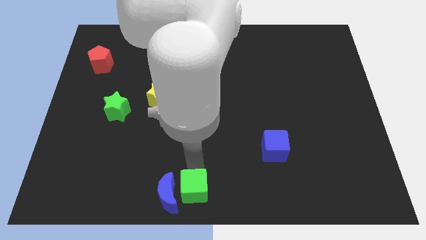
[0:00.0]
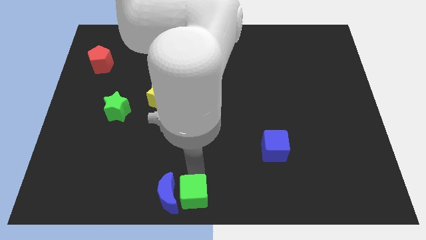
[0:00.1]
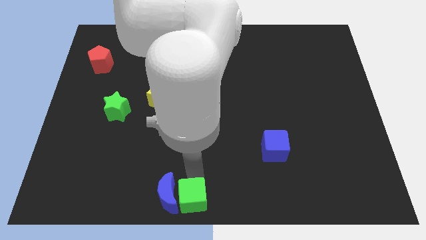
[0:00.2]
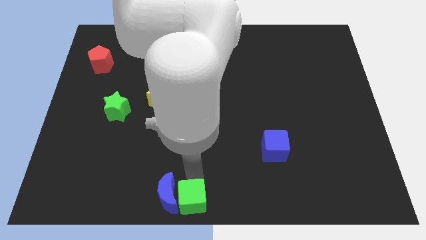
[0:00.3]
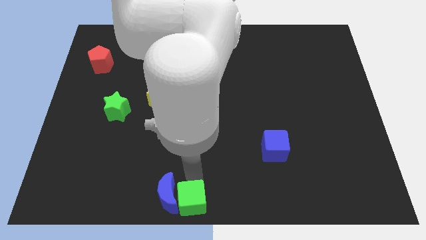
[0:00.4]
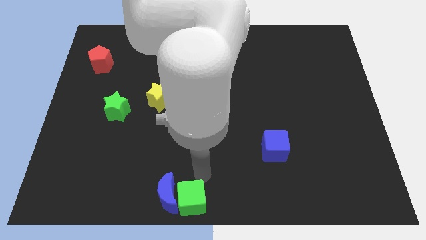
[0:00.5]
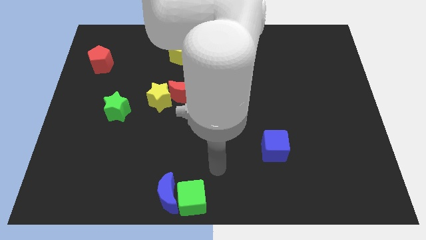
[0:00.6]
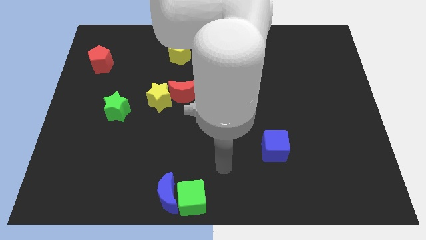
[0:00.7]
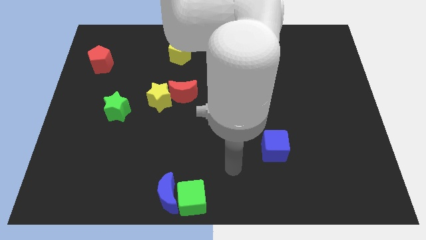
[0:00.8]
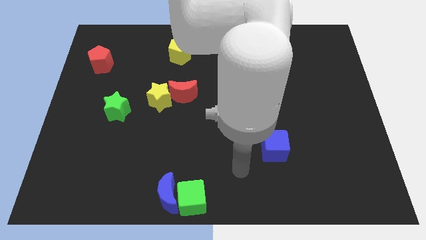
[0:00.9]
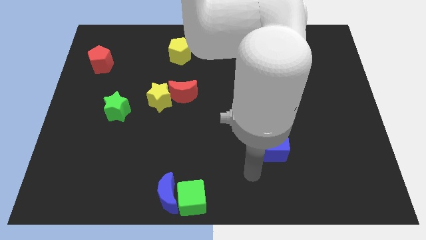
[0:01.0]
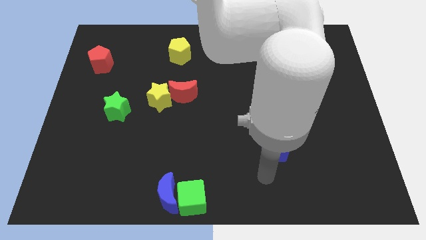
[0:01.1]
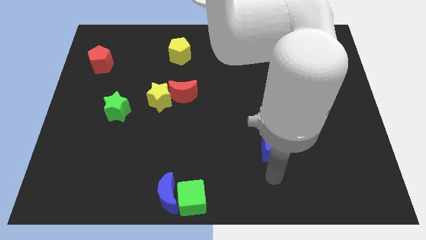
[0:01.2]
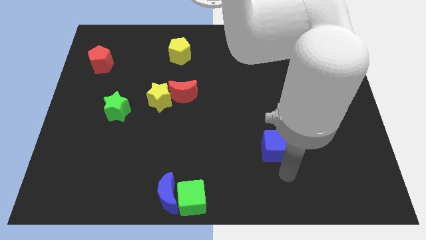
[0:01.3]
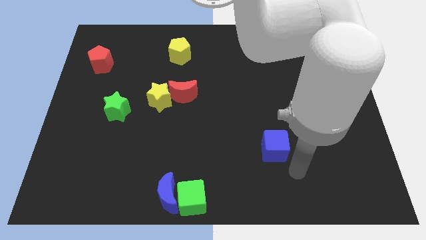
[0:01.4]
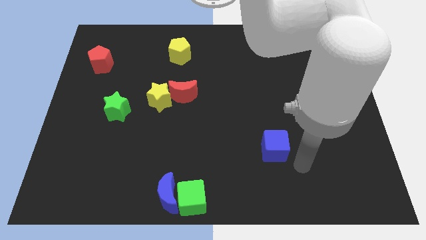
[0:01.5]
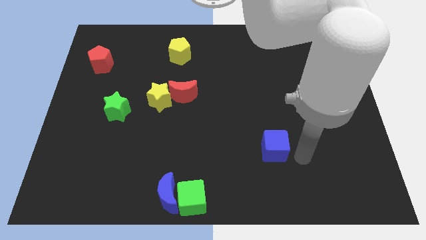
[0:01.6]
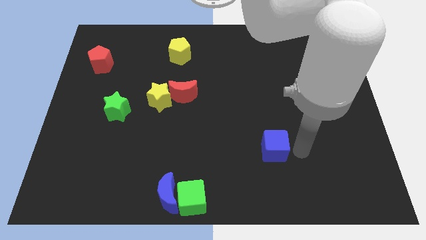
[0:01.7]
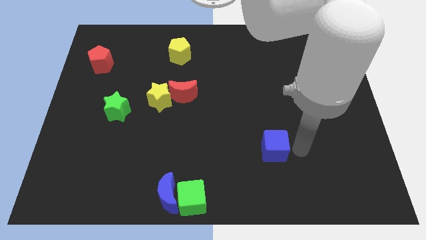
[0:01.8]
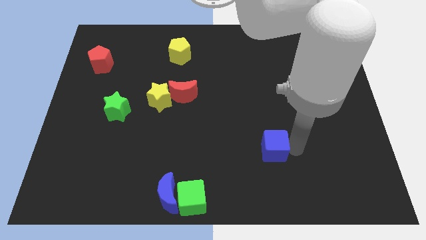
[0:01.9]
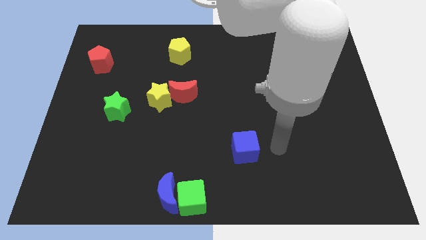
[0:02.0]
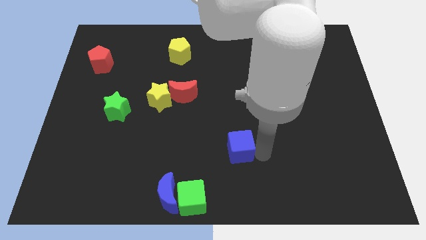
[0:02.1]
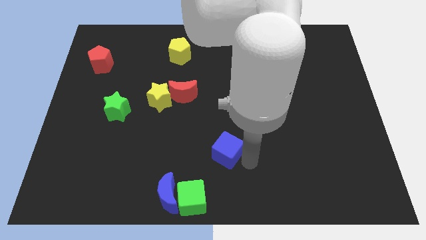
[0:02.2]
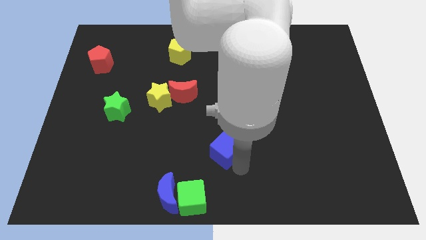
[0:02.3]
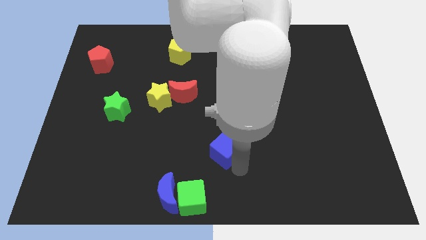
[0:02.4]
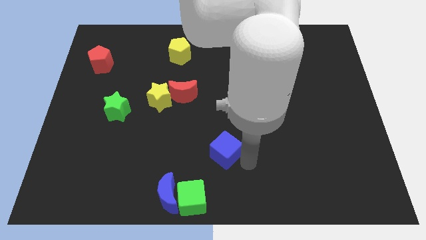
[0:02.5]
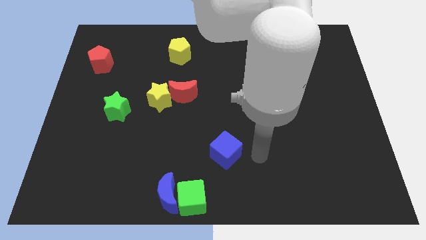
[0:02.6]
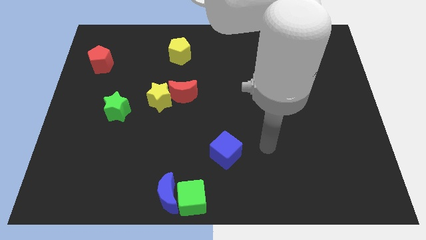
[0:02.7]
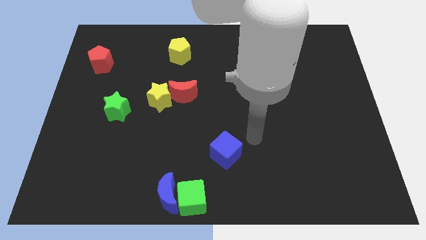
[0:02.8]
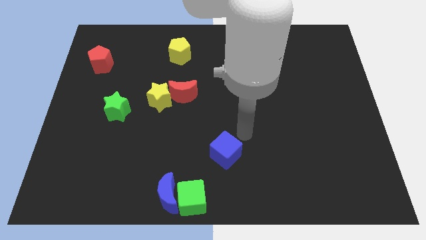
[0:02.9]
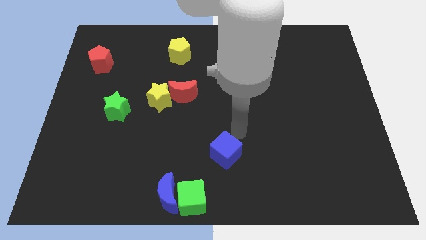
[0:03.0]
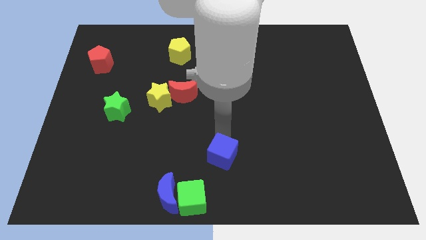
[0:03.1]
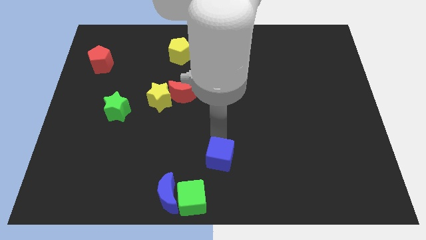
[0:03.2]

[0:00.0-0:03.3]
push the blue cube to the top right side of the green cube

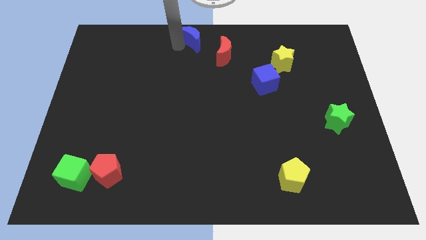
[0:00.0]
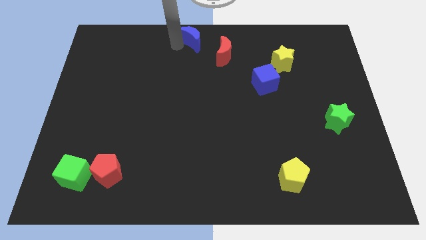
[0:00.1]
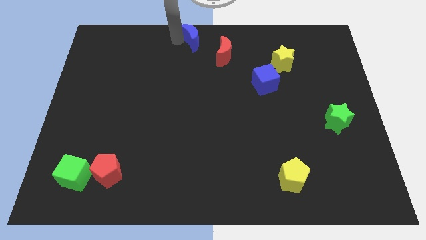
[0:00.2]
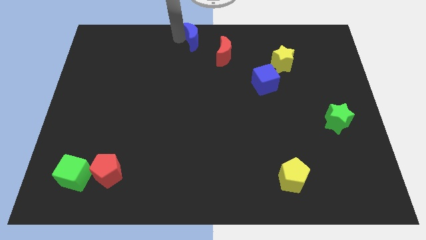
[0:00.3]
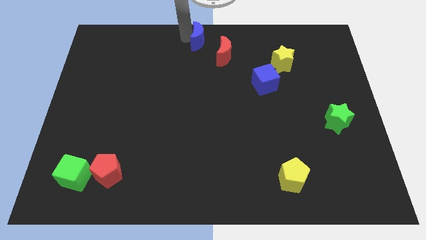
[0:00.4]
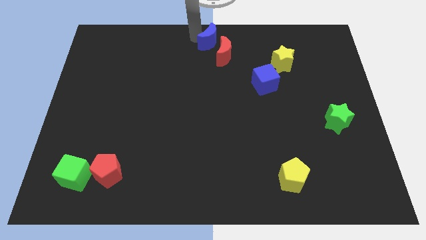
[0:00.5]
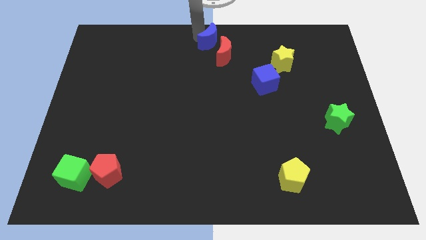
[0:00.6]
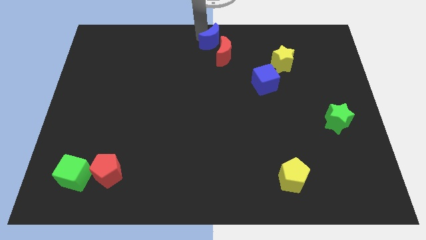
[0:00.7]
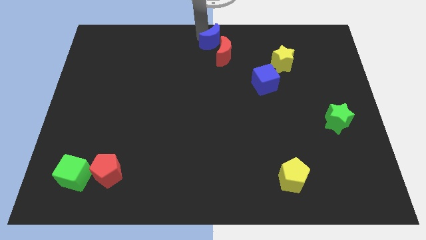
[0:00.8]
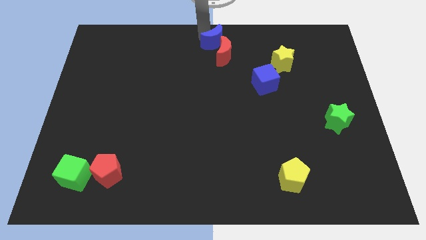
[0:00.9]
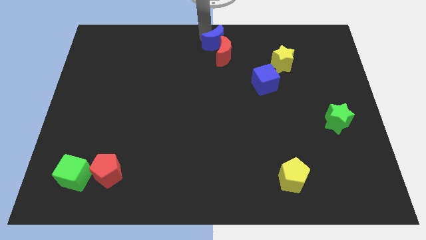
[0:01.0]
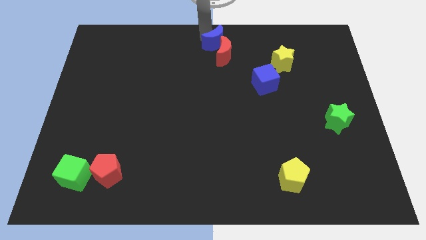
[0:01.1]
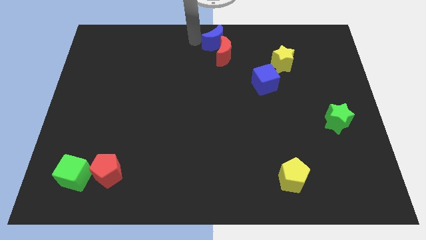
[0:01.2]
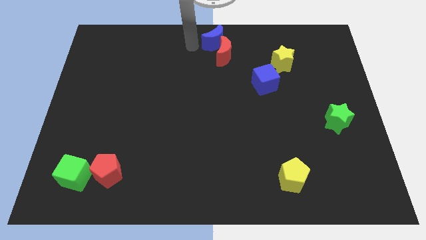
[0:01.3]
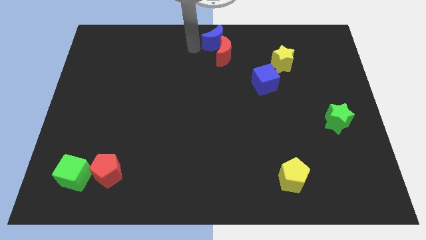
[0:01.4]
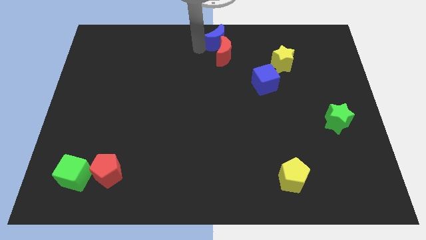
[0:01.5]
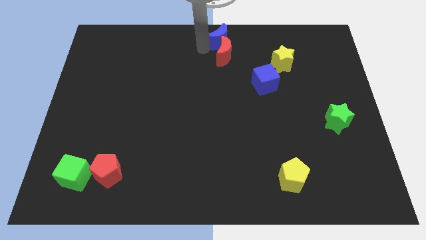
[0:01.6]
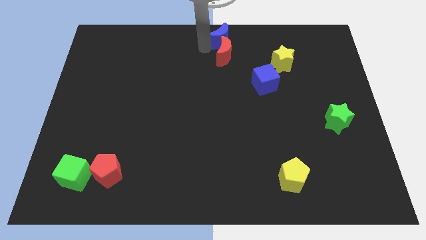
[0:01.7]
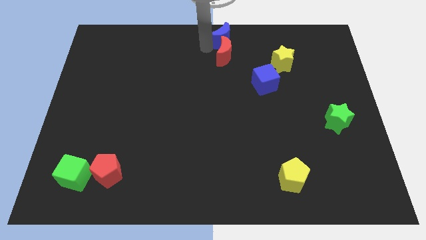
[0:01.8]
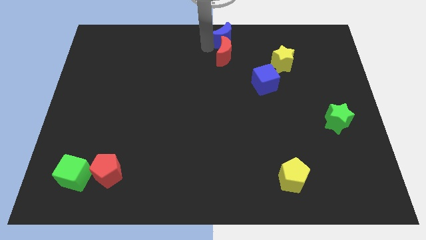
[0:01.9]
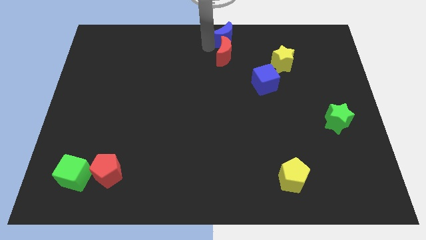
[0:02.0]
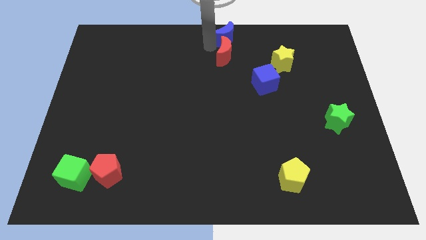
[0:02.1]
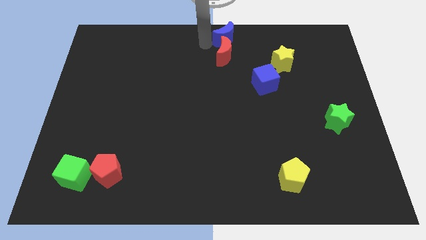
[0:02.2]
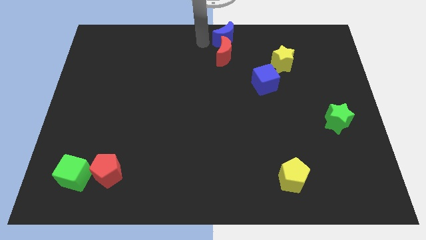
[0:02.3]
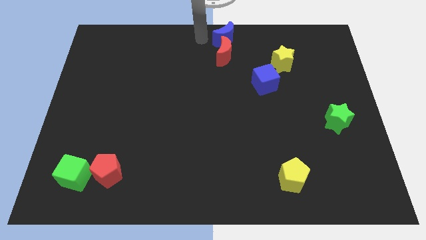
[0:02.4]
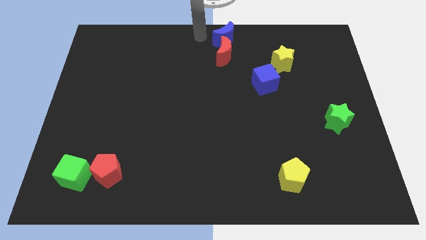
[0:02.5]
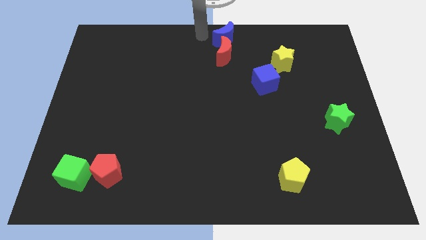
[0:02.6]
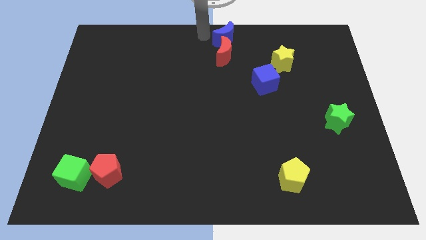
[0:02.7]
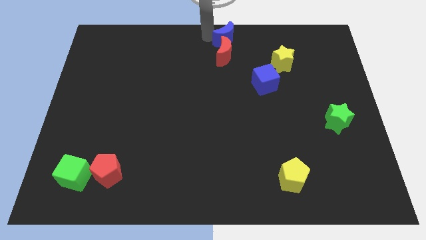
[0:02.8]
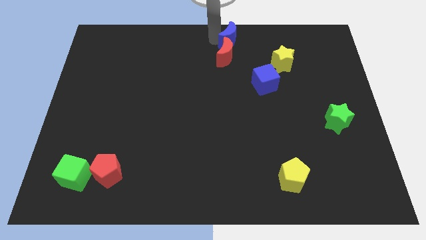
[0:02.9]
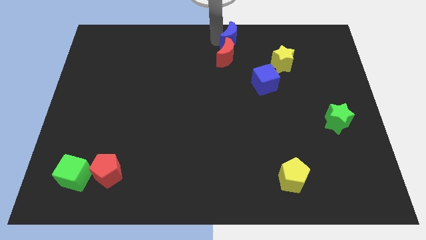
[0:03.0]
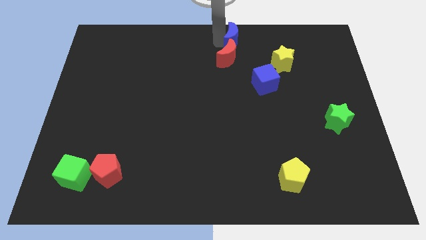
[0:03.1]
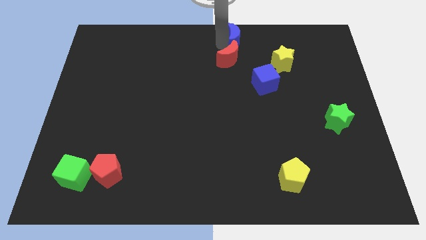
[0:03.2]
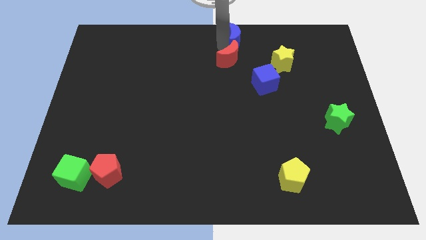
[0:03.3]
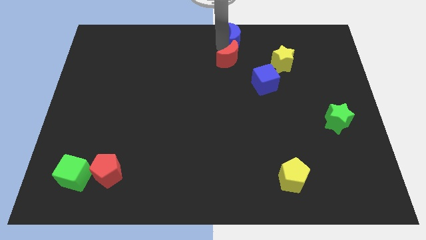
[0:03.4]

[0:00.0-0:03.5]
push the blue and red crescents at the top center of the board

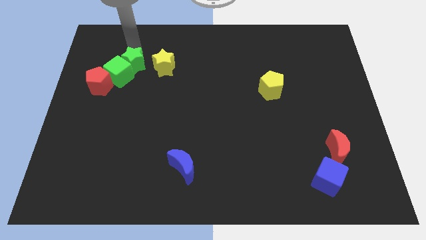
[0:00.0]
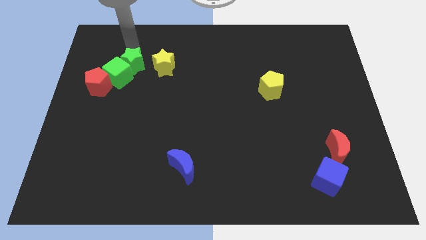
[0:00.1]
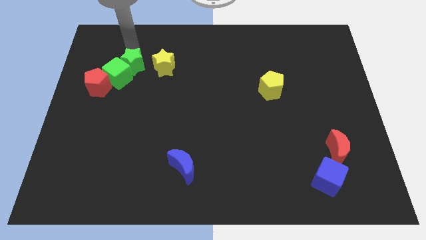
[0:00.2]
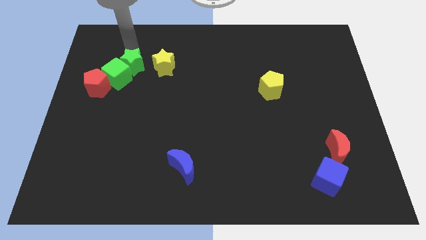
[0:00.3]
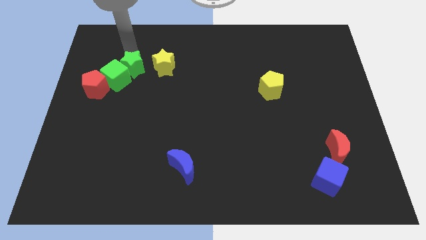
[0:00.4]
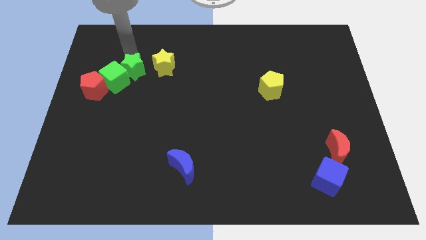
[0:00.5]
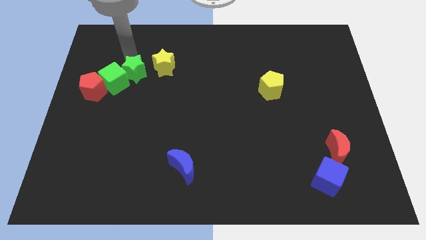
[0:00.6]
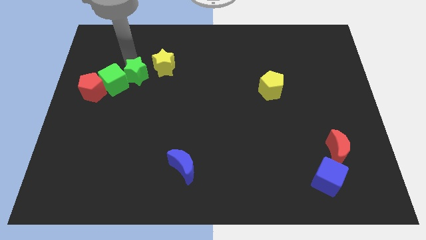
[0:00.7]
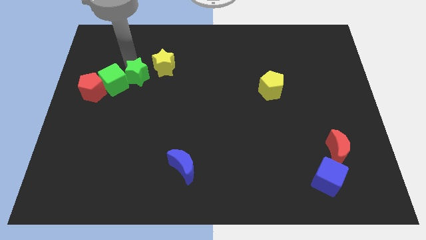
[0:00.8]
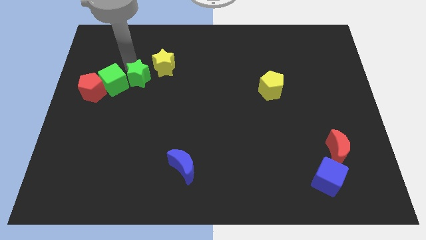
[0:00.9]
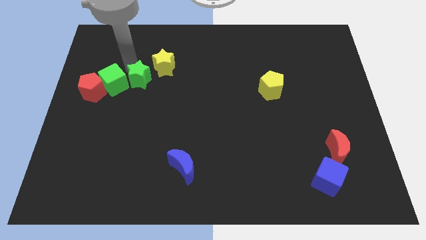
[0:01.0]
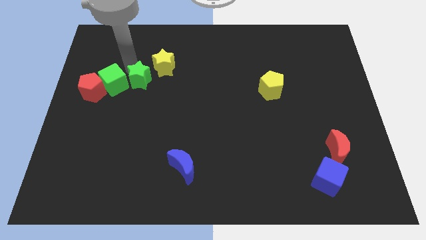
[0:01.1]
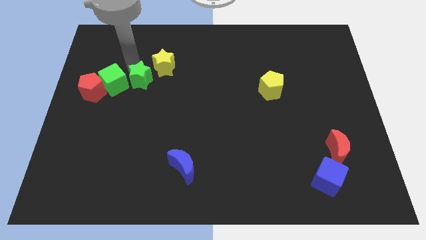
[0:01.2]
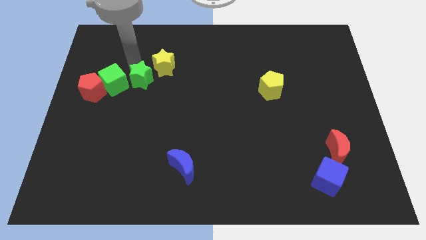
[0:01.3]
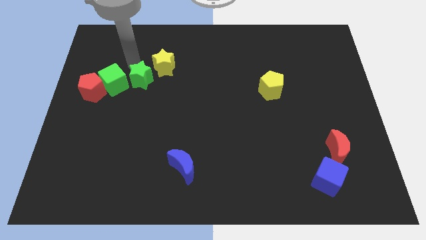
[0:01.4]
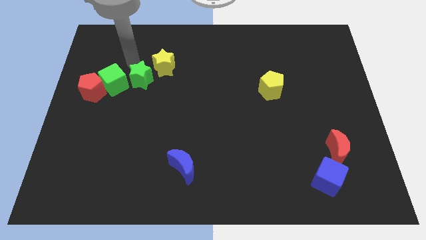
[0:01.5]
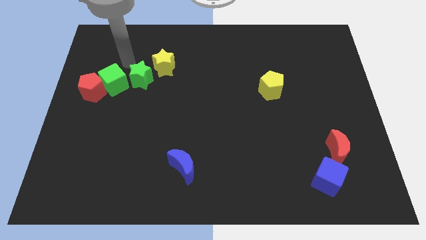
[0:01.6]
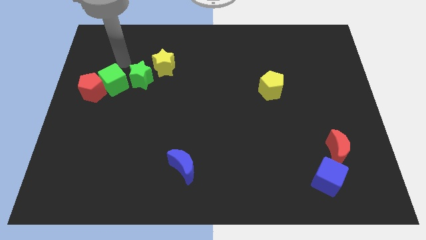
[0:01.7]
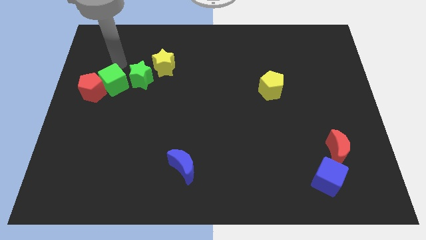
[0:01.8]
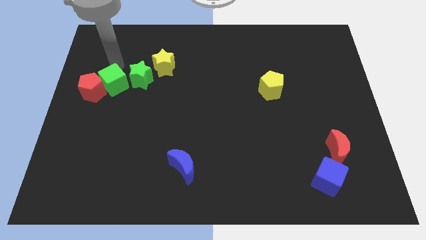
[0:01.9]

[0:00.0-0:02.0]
slightly move the green star from the green cube
